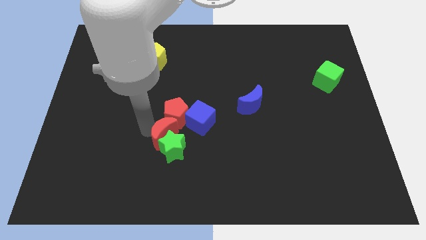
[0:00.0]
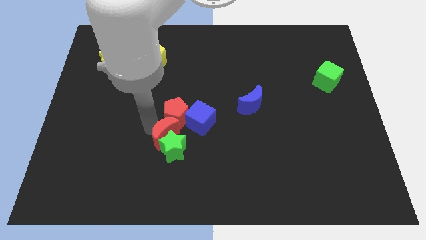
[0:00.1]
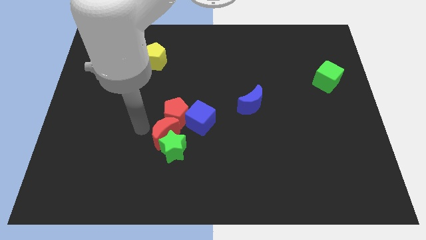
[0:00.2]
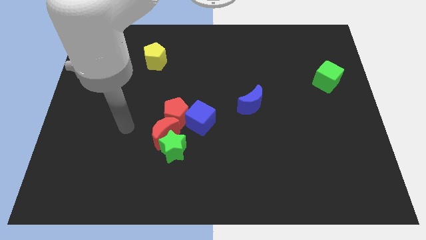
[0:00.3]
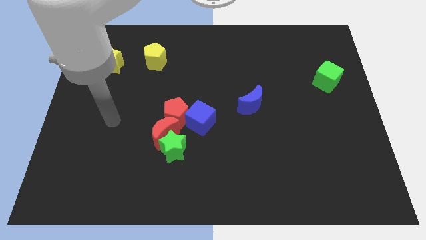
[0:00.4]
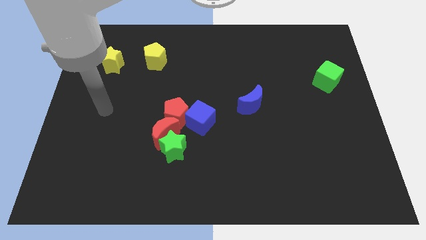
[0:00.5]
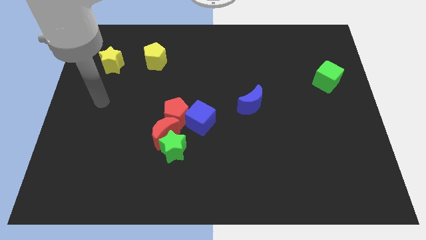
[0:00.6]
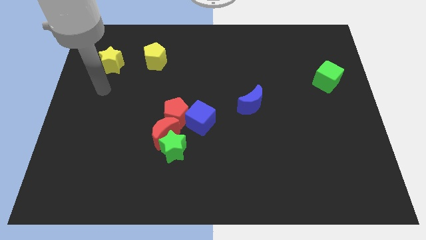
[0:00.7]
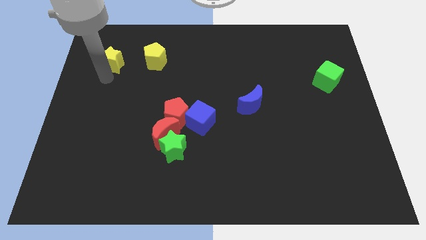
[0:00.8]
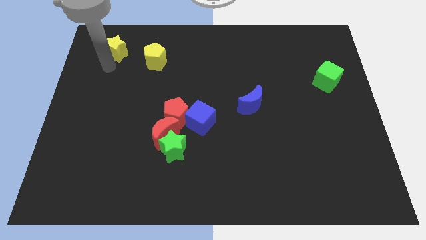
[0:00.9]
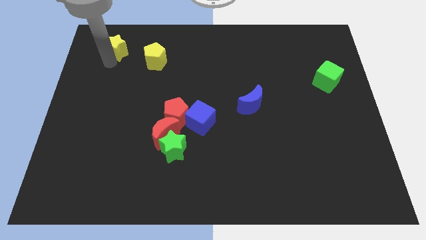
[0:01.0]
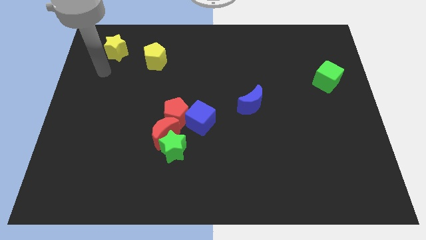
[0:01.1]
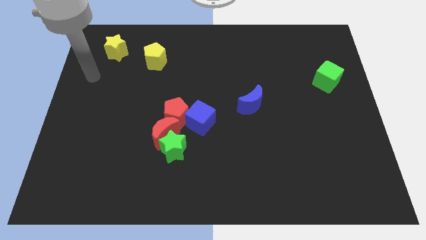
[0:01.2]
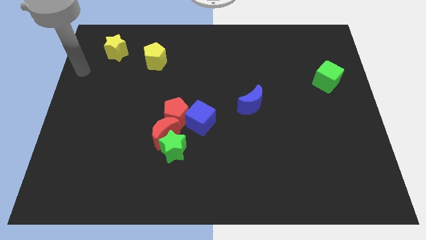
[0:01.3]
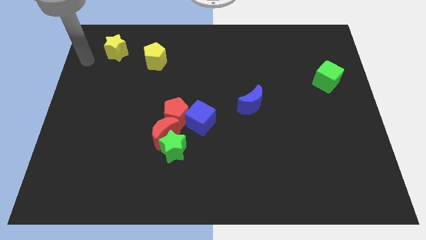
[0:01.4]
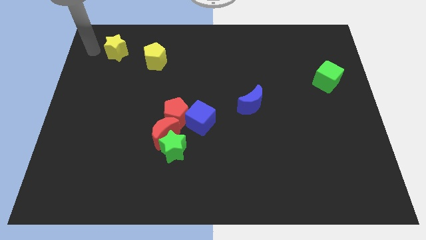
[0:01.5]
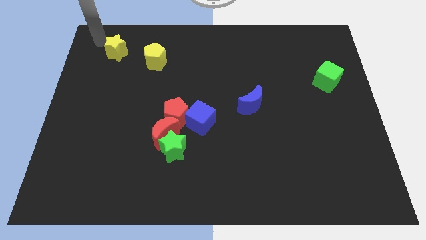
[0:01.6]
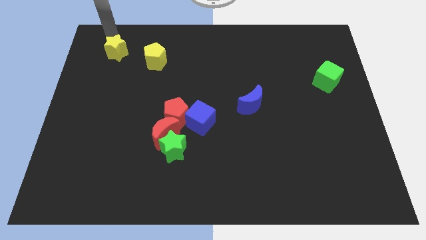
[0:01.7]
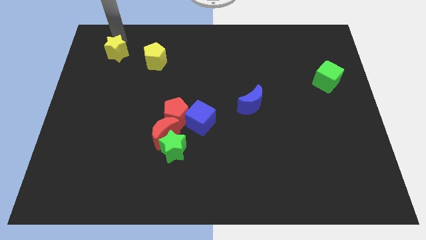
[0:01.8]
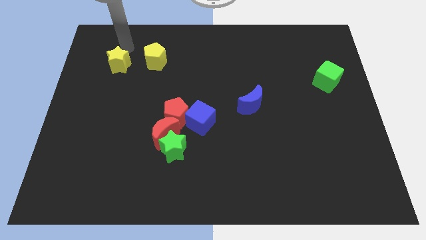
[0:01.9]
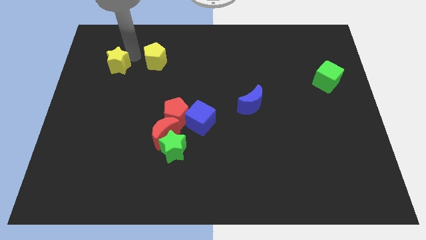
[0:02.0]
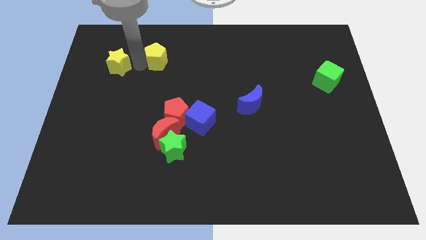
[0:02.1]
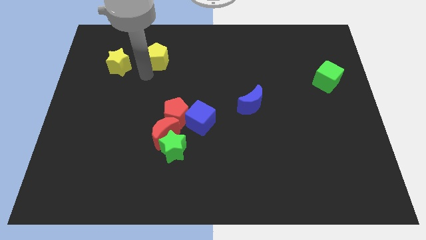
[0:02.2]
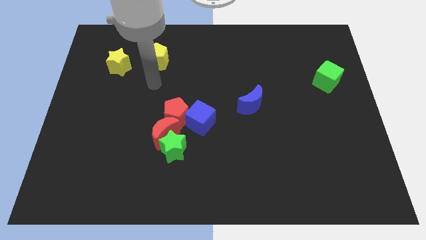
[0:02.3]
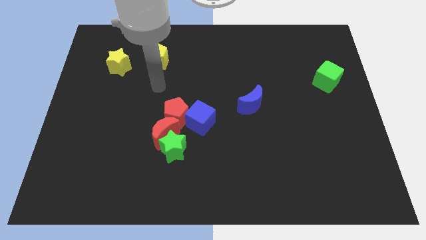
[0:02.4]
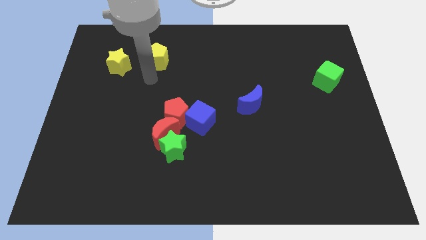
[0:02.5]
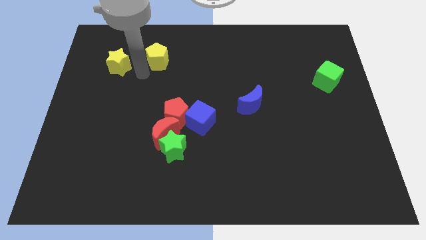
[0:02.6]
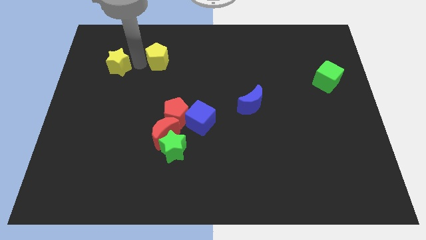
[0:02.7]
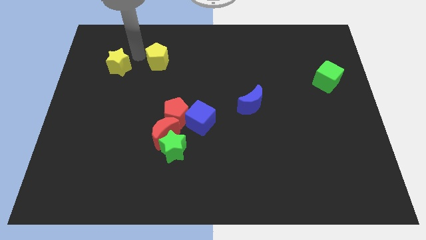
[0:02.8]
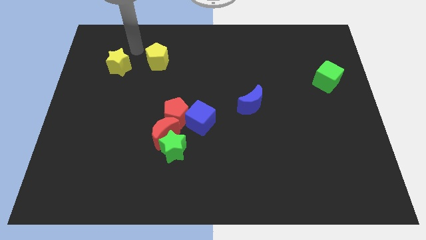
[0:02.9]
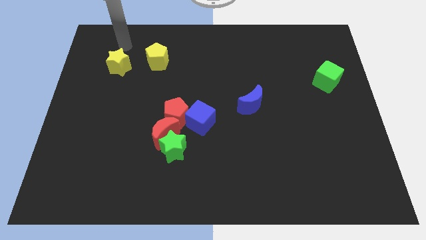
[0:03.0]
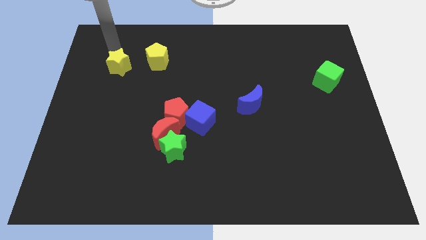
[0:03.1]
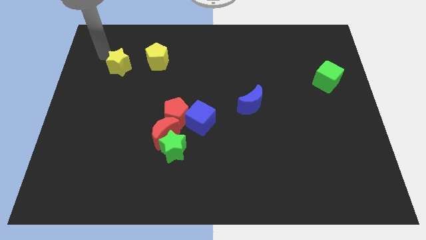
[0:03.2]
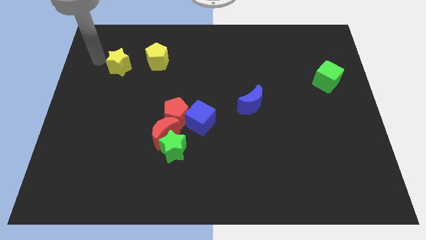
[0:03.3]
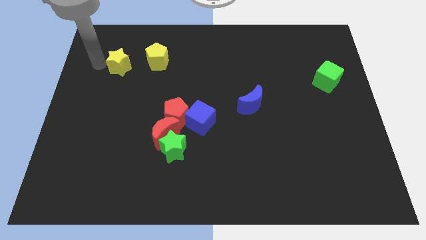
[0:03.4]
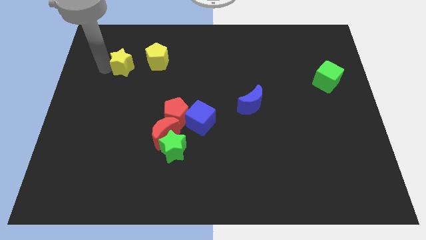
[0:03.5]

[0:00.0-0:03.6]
slightly push the yellow star towards the top and bottom sides of the board

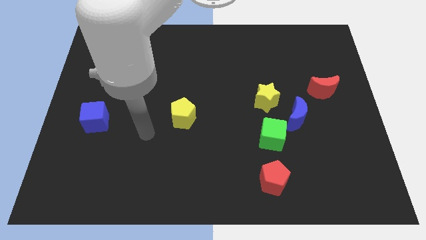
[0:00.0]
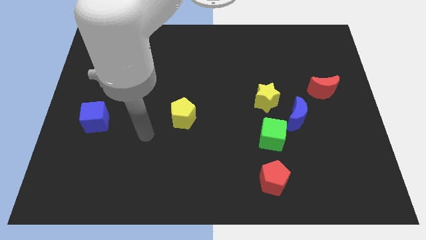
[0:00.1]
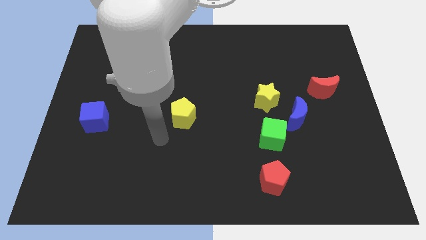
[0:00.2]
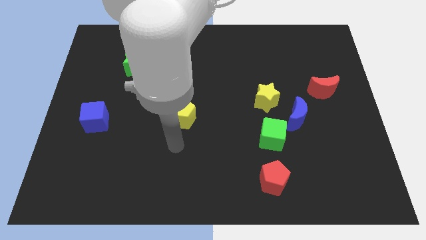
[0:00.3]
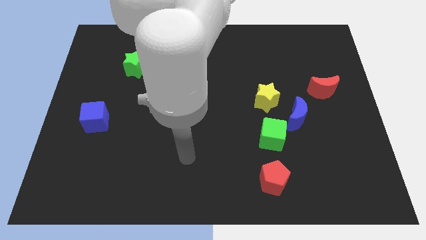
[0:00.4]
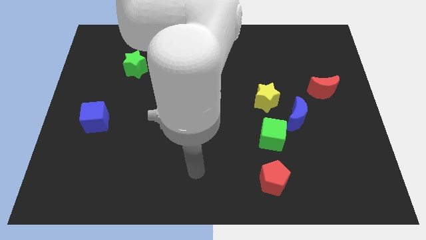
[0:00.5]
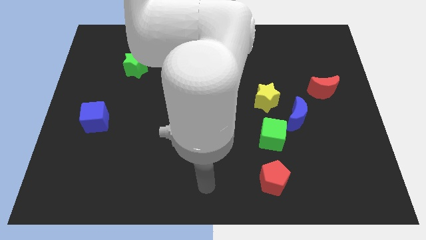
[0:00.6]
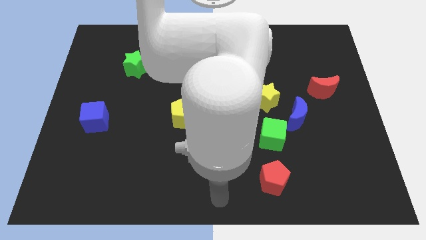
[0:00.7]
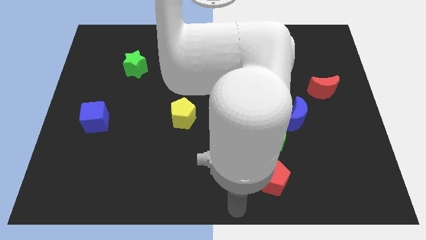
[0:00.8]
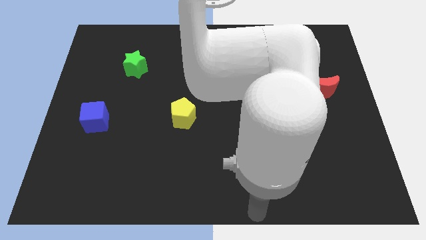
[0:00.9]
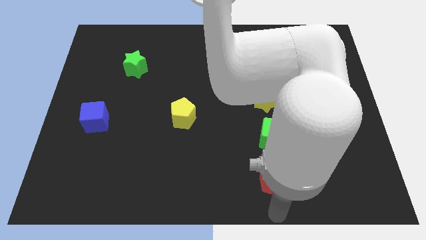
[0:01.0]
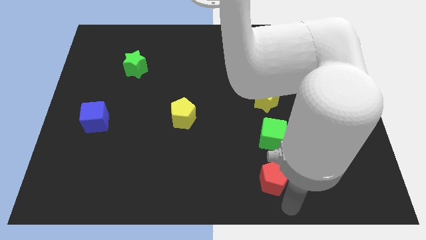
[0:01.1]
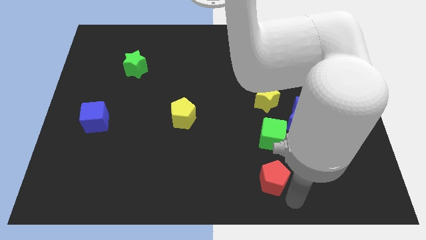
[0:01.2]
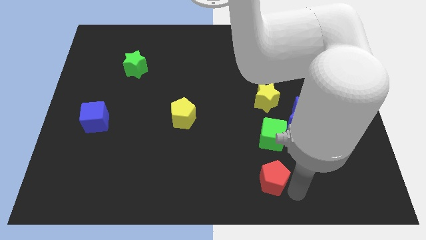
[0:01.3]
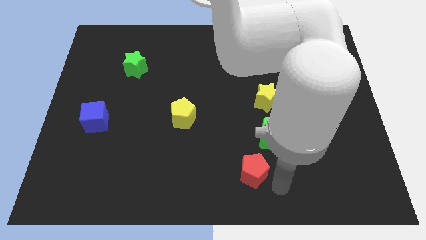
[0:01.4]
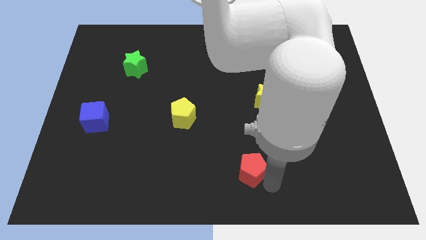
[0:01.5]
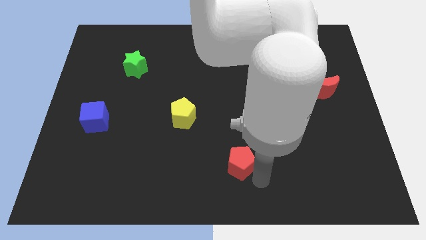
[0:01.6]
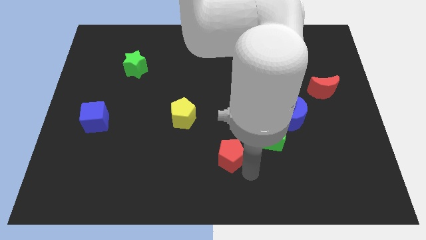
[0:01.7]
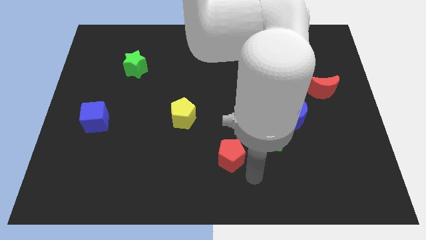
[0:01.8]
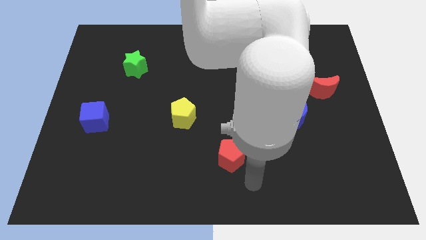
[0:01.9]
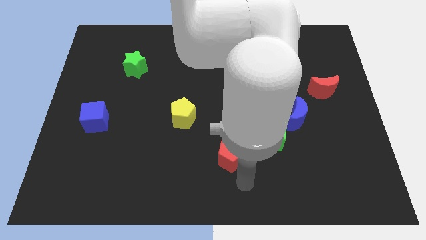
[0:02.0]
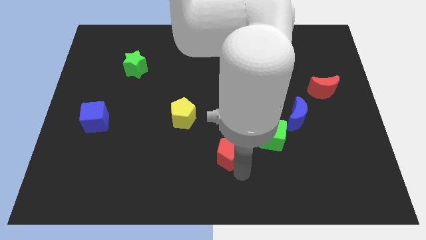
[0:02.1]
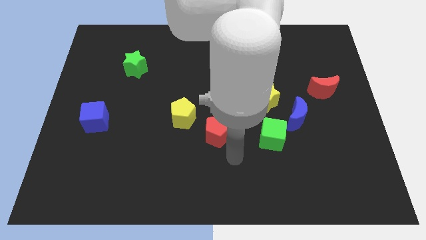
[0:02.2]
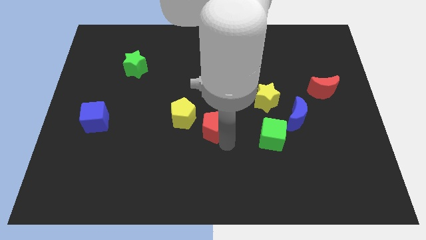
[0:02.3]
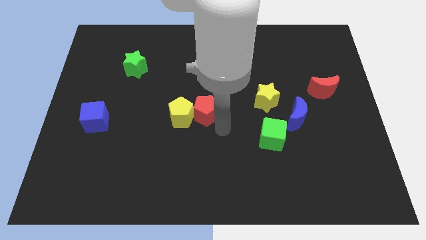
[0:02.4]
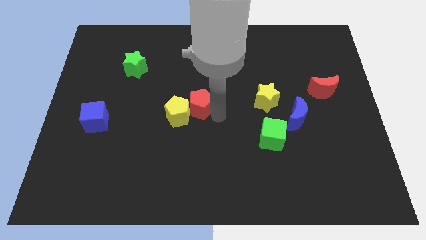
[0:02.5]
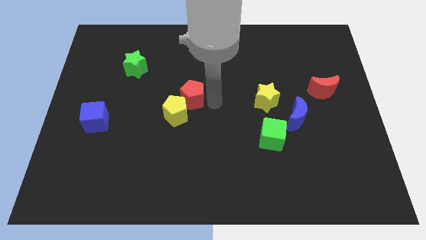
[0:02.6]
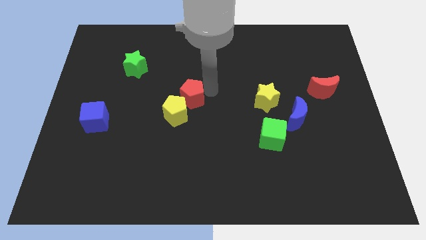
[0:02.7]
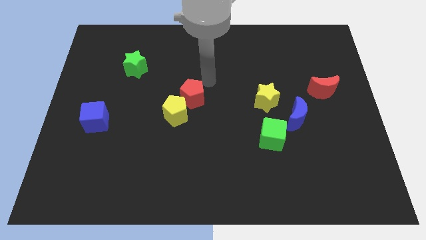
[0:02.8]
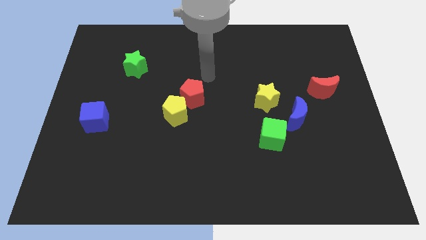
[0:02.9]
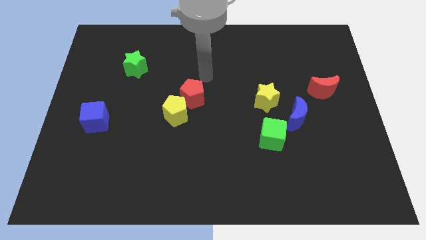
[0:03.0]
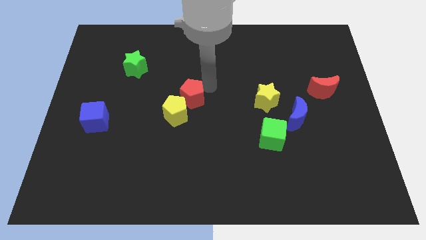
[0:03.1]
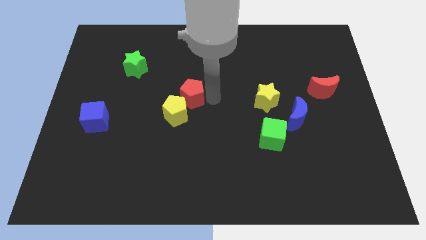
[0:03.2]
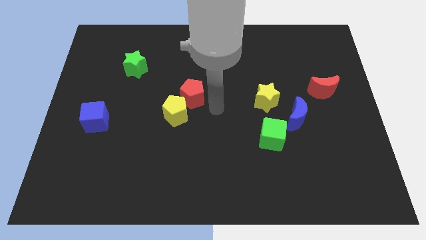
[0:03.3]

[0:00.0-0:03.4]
push the red pentagon towards the yellow pentagon

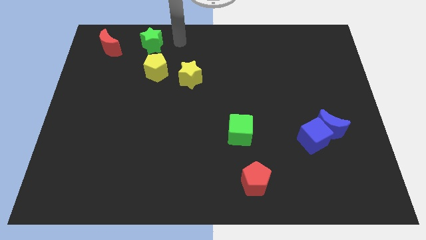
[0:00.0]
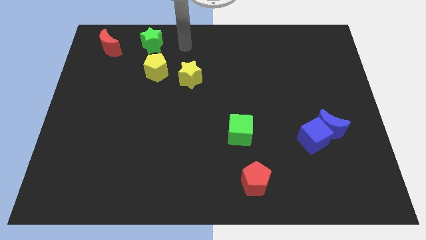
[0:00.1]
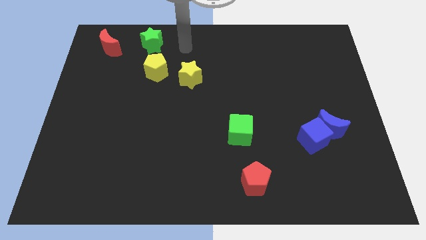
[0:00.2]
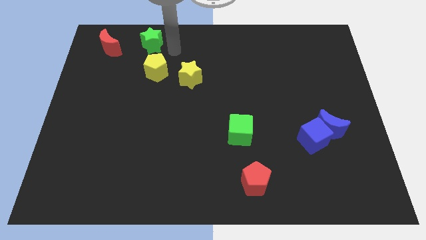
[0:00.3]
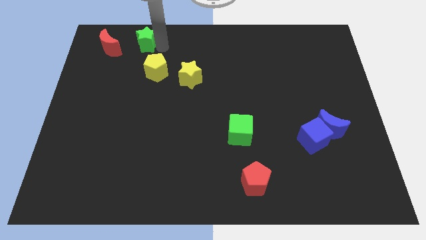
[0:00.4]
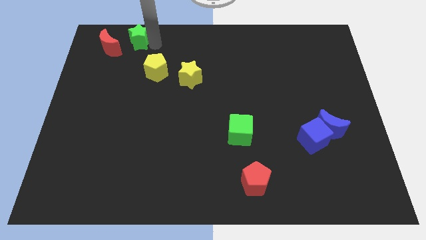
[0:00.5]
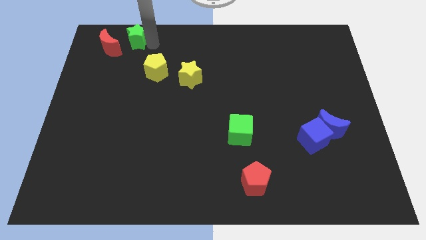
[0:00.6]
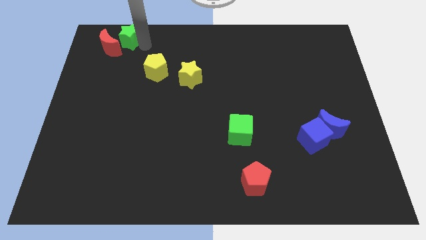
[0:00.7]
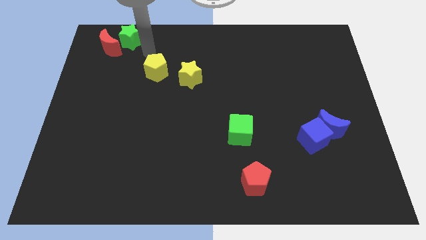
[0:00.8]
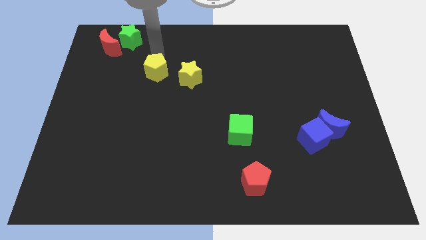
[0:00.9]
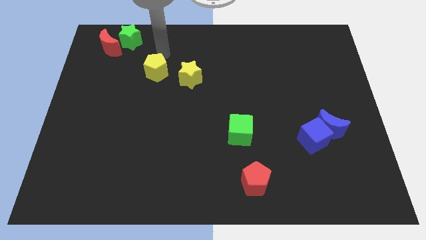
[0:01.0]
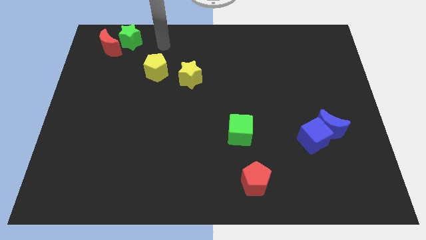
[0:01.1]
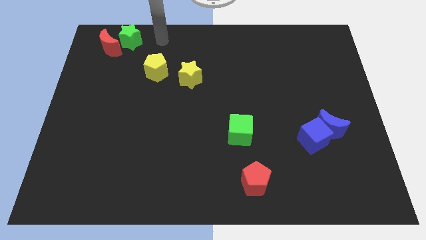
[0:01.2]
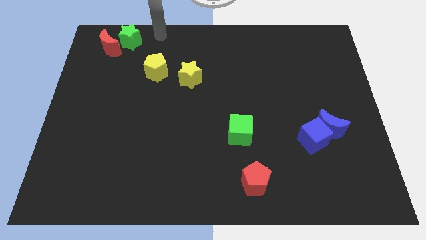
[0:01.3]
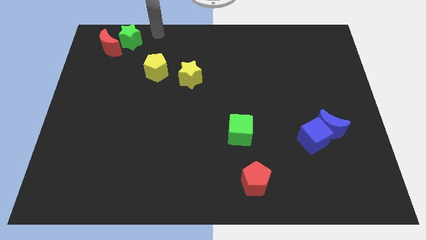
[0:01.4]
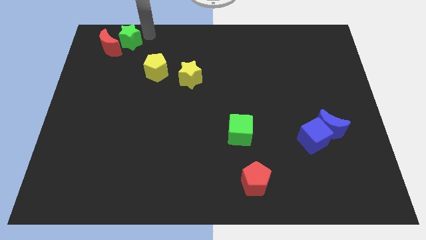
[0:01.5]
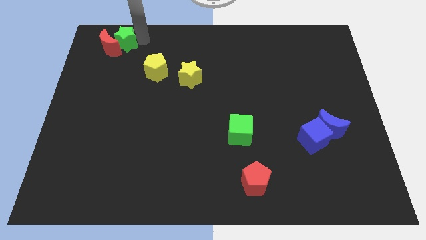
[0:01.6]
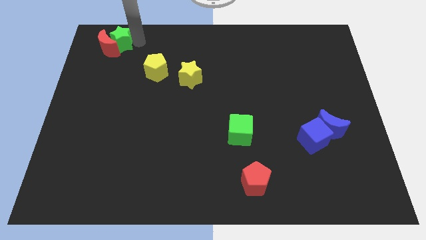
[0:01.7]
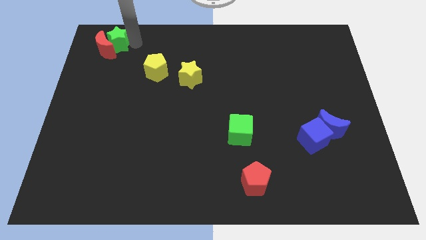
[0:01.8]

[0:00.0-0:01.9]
move the green star into the red moon

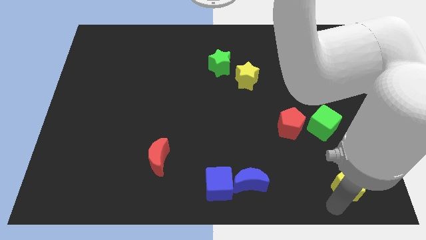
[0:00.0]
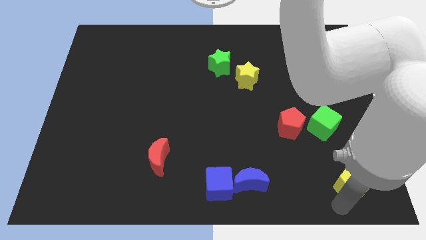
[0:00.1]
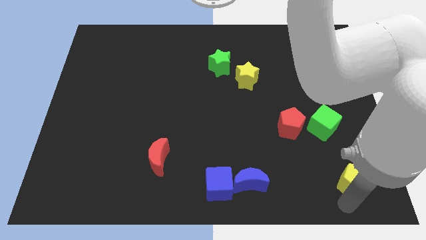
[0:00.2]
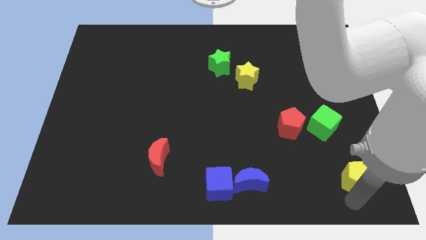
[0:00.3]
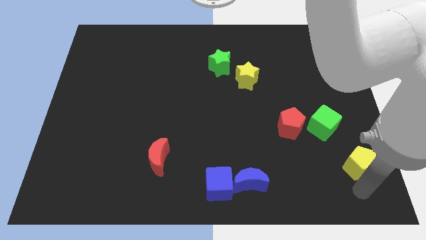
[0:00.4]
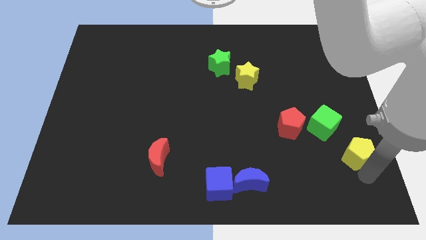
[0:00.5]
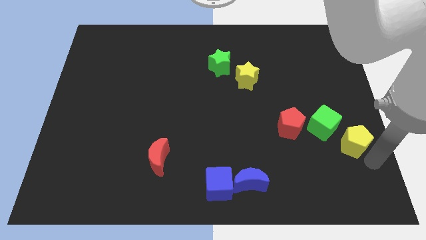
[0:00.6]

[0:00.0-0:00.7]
push the yellow pentagon to the right of the green cube
